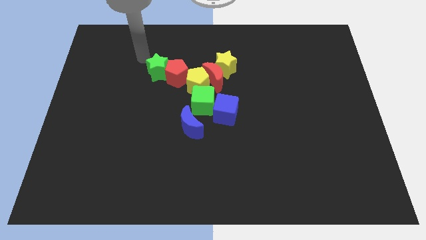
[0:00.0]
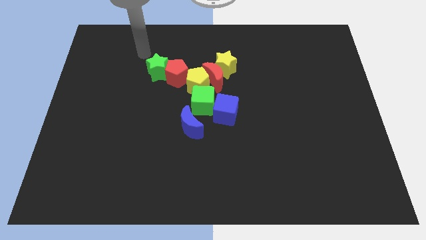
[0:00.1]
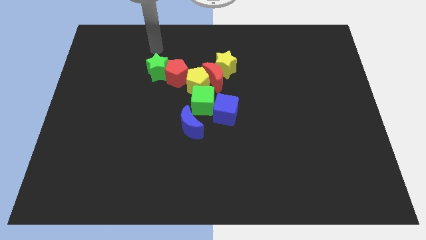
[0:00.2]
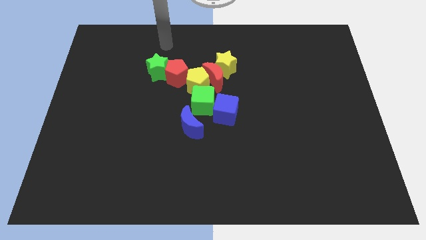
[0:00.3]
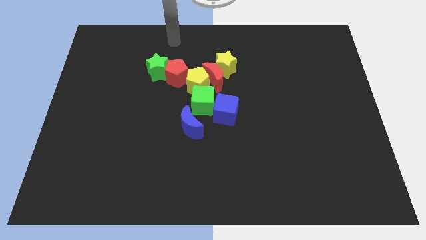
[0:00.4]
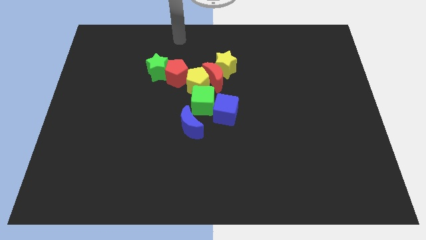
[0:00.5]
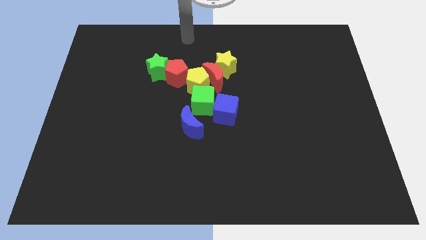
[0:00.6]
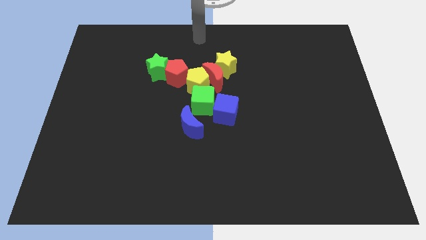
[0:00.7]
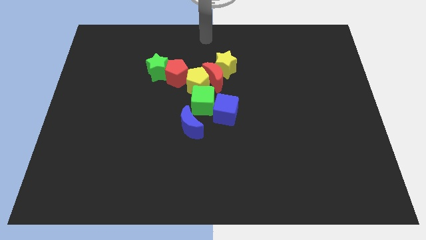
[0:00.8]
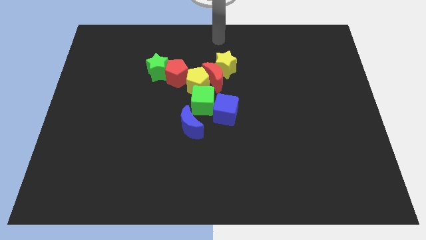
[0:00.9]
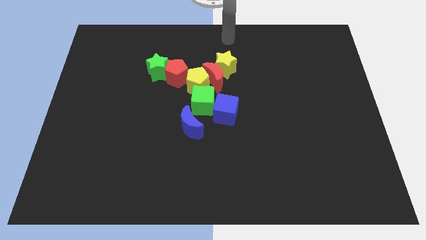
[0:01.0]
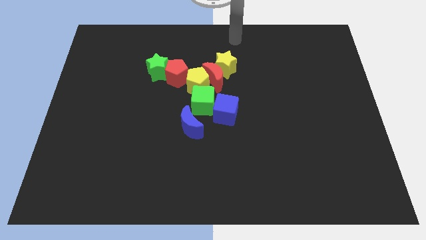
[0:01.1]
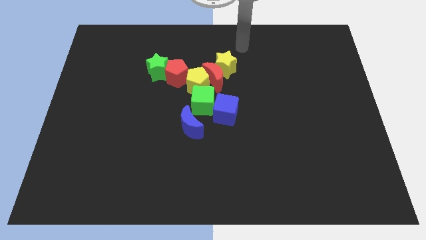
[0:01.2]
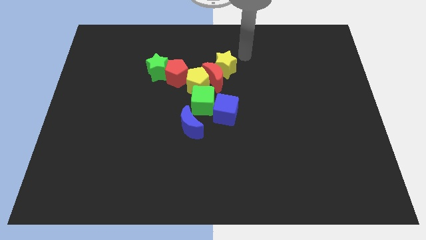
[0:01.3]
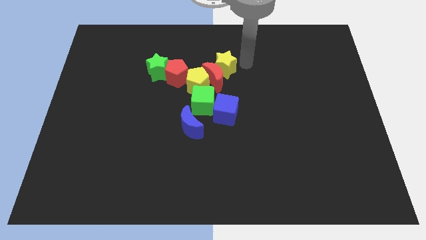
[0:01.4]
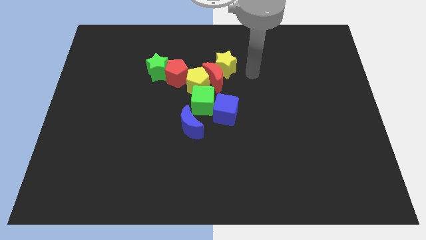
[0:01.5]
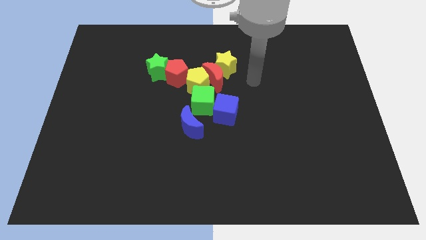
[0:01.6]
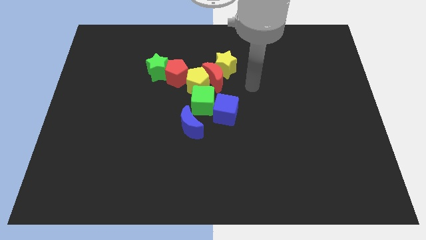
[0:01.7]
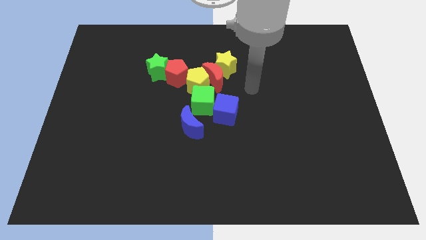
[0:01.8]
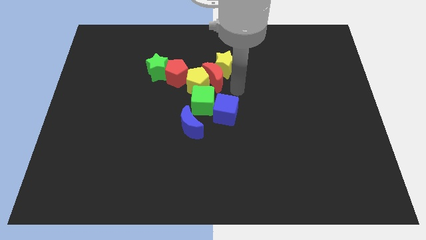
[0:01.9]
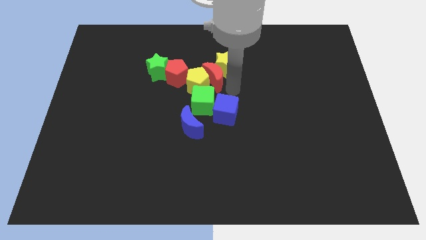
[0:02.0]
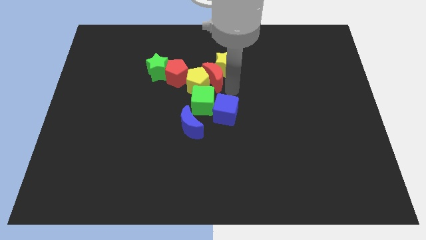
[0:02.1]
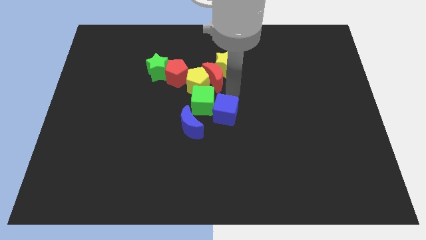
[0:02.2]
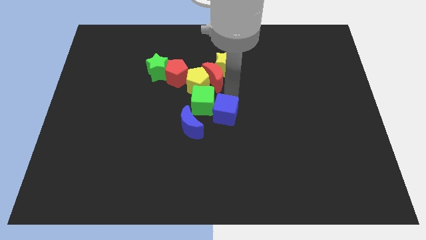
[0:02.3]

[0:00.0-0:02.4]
point the arm above the blue cube

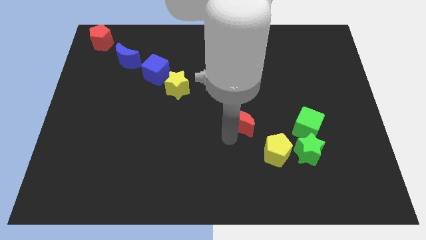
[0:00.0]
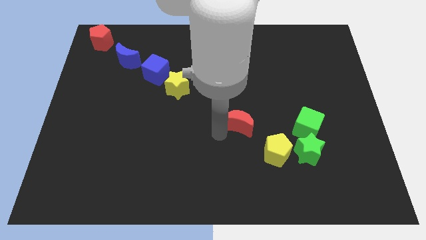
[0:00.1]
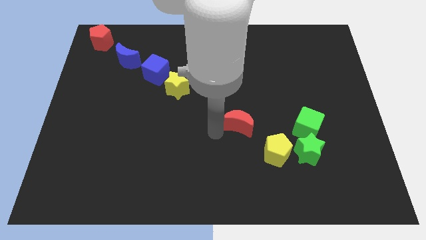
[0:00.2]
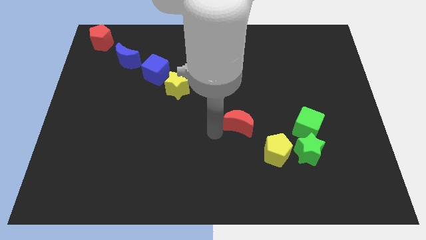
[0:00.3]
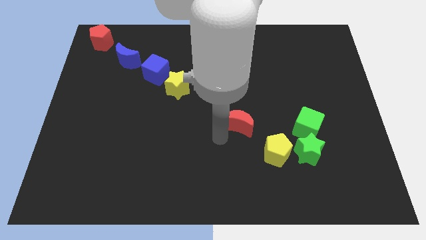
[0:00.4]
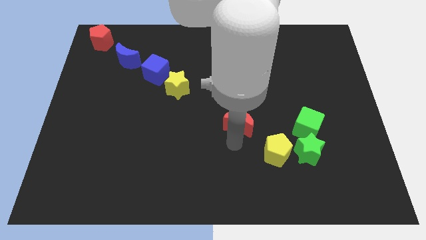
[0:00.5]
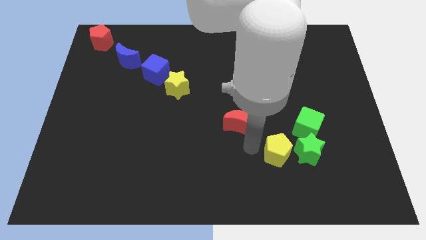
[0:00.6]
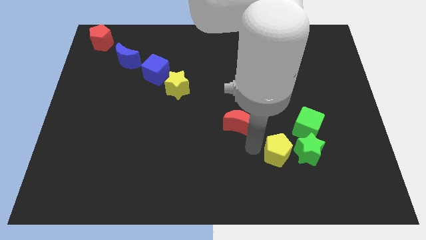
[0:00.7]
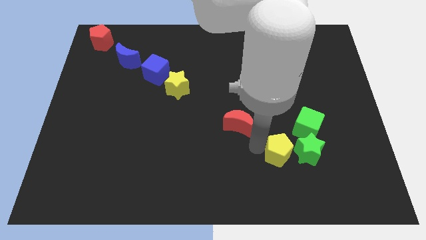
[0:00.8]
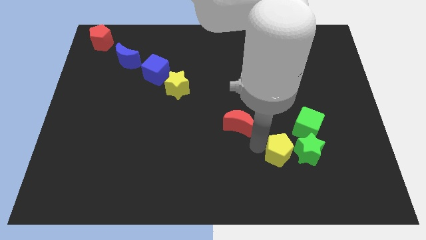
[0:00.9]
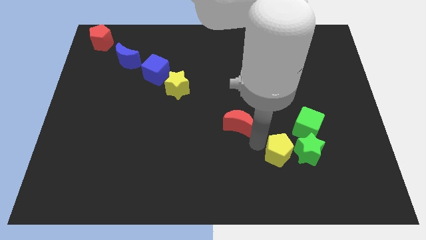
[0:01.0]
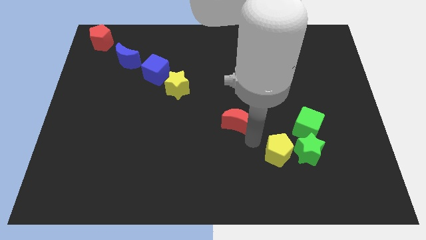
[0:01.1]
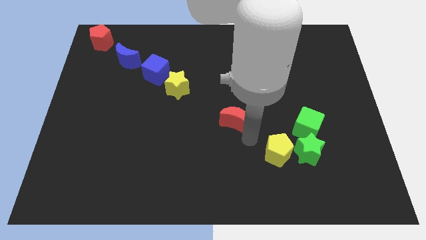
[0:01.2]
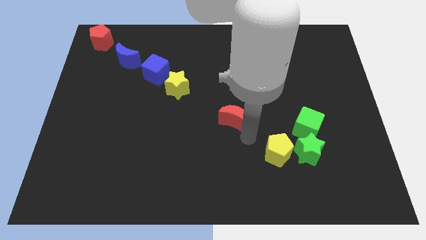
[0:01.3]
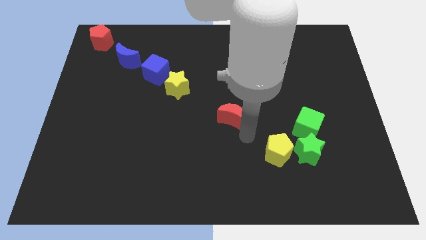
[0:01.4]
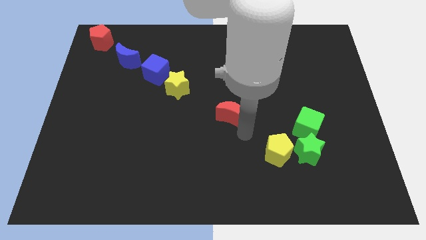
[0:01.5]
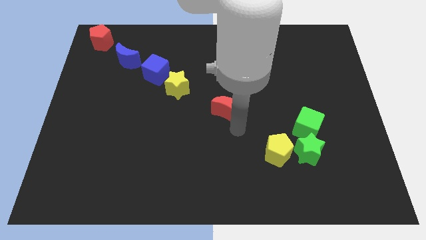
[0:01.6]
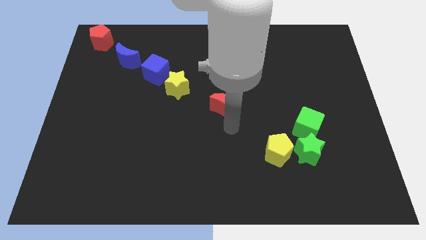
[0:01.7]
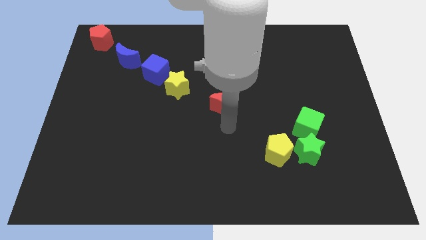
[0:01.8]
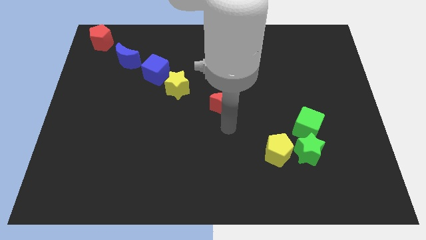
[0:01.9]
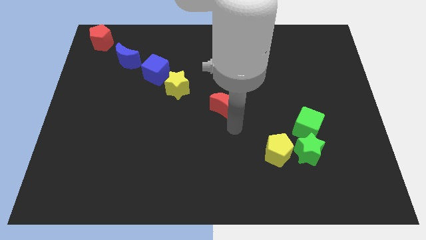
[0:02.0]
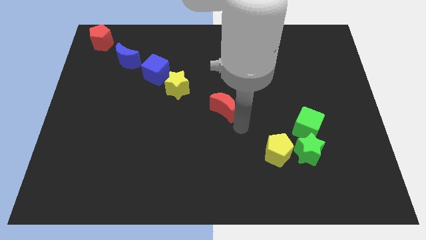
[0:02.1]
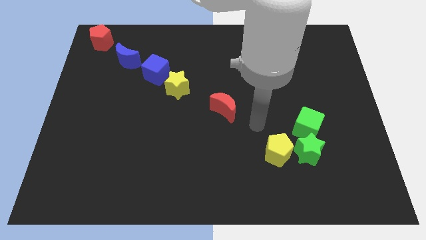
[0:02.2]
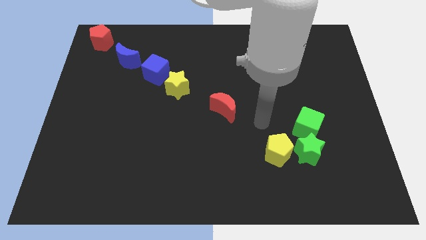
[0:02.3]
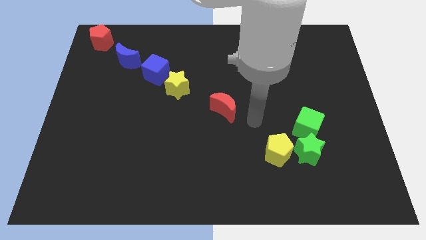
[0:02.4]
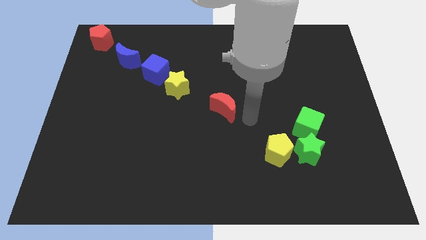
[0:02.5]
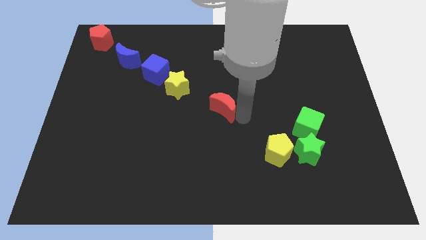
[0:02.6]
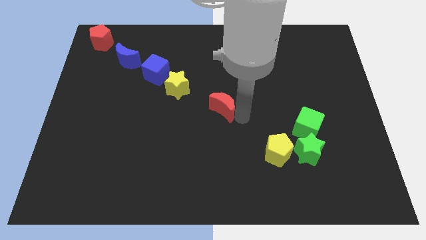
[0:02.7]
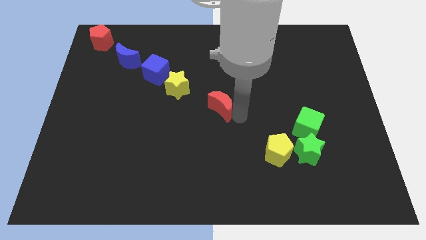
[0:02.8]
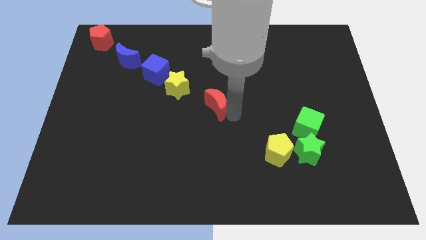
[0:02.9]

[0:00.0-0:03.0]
push the red crescent to the center of the board

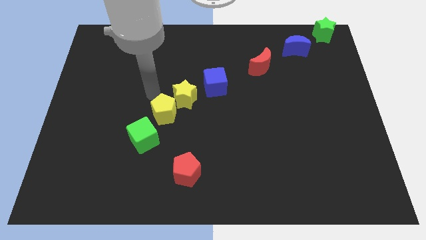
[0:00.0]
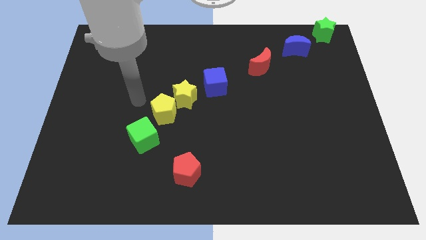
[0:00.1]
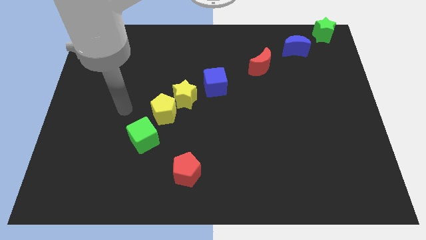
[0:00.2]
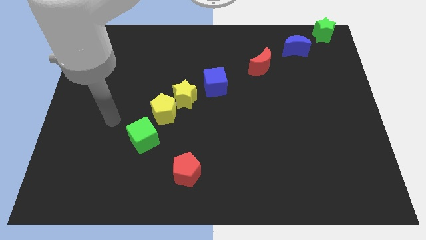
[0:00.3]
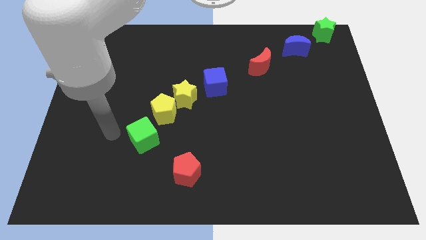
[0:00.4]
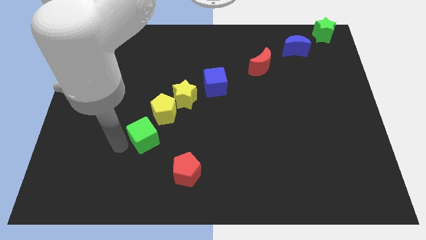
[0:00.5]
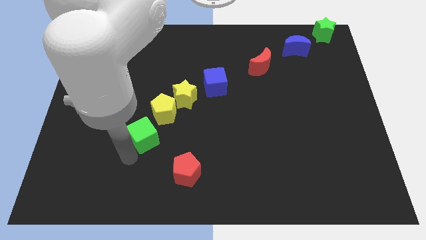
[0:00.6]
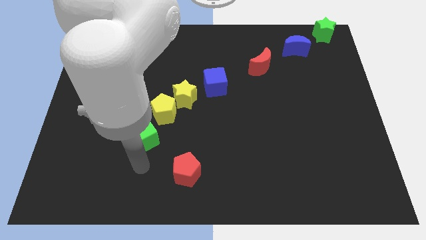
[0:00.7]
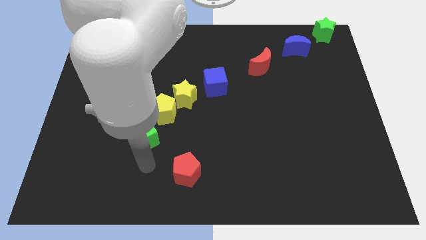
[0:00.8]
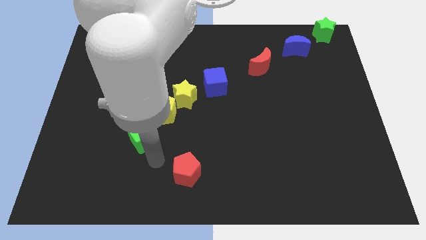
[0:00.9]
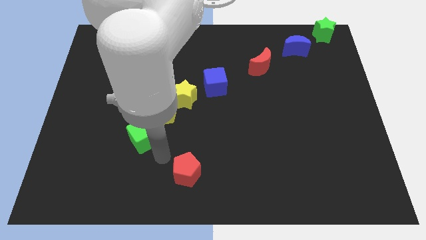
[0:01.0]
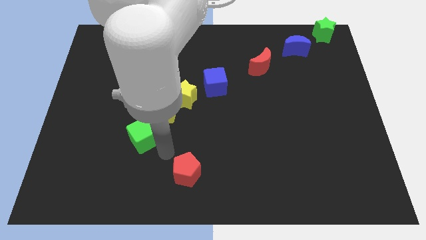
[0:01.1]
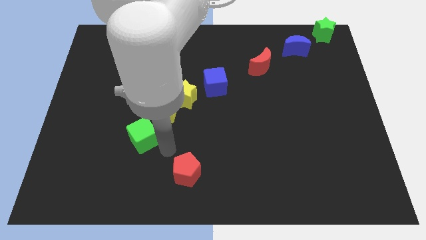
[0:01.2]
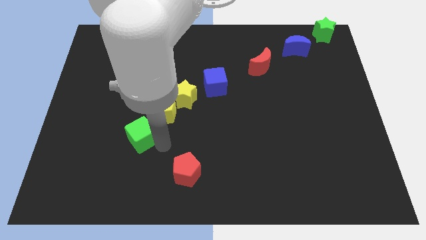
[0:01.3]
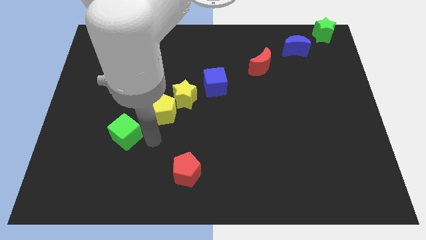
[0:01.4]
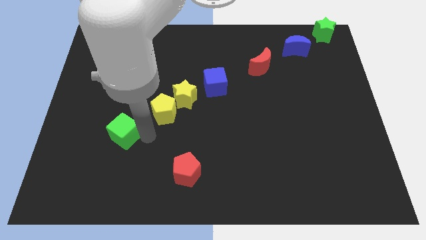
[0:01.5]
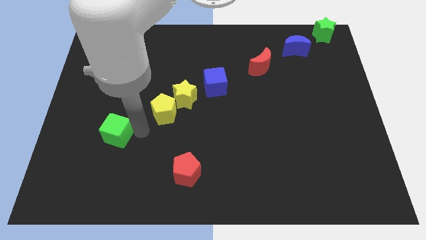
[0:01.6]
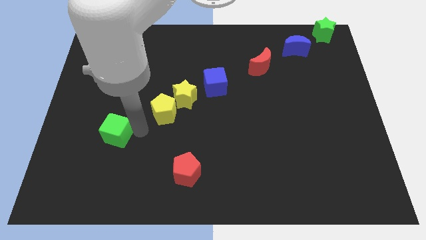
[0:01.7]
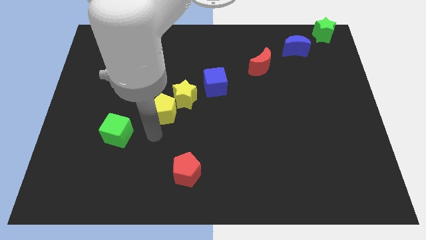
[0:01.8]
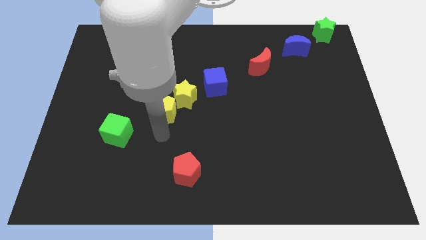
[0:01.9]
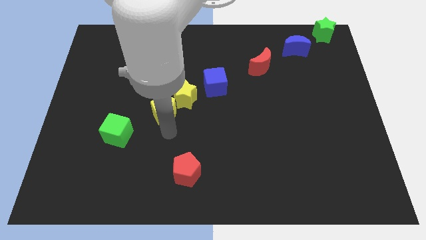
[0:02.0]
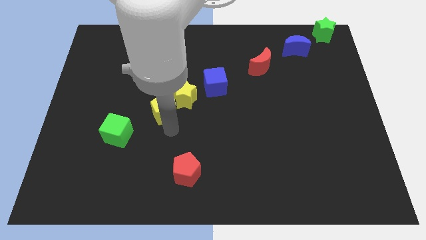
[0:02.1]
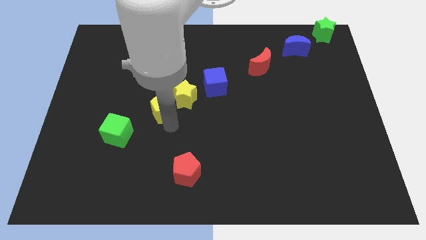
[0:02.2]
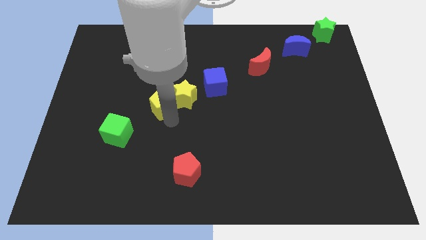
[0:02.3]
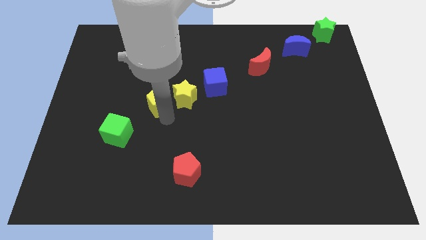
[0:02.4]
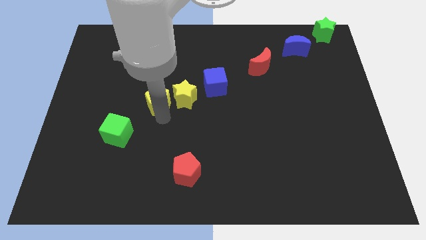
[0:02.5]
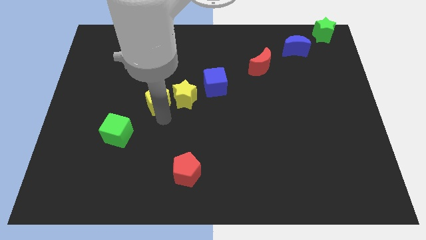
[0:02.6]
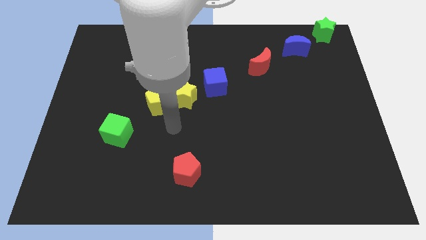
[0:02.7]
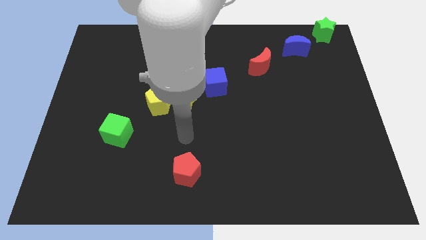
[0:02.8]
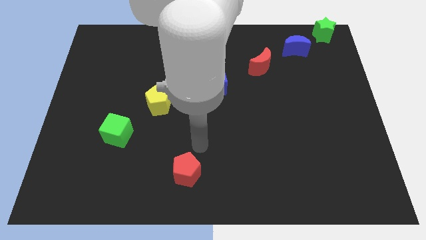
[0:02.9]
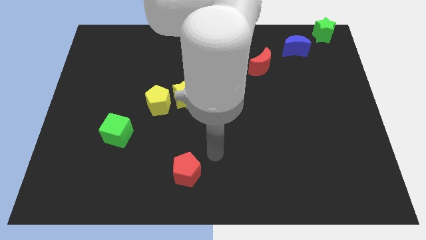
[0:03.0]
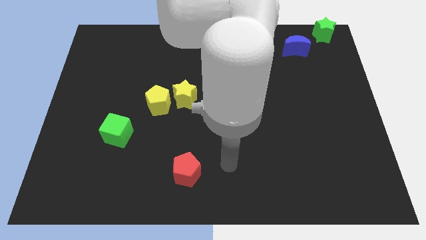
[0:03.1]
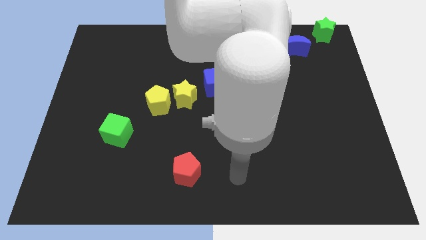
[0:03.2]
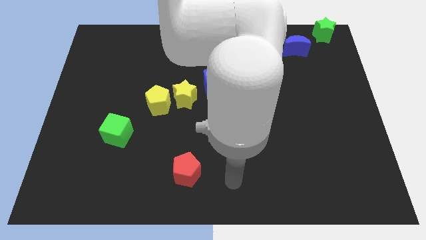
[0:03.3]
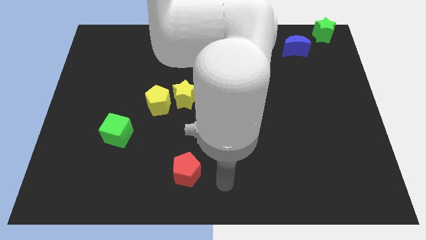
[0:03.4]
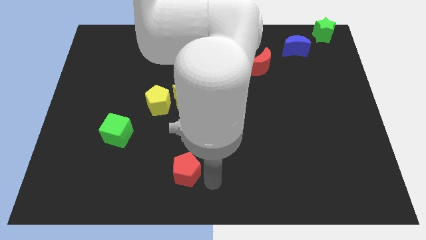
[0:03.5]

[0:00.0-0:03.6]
touch the bottom of yellow pentagon and green cube
